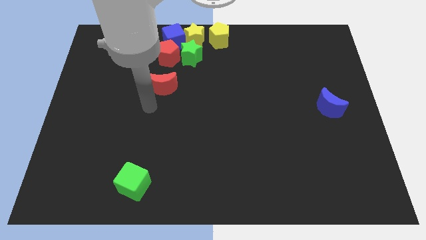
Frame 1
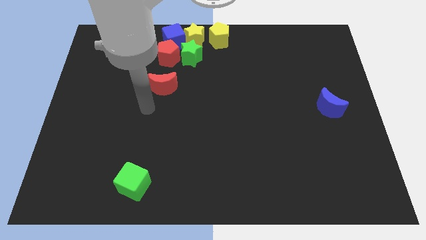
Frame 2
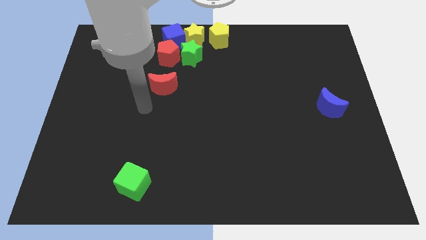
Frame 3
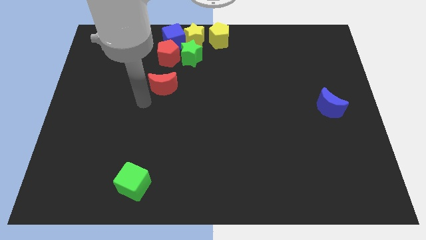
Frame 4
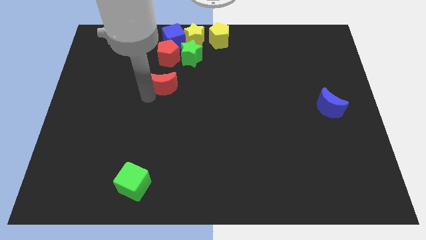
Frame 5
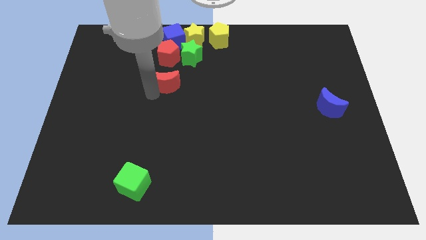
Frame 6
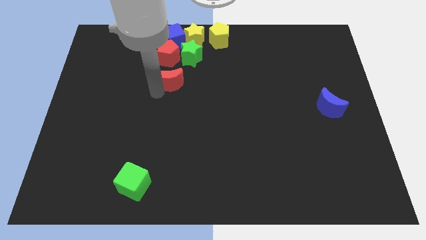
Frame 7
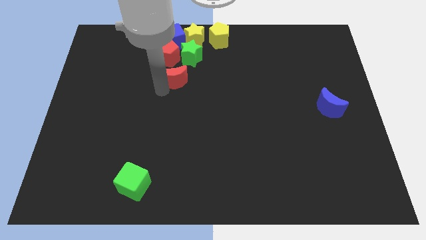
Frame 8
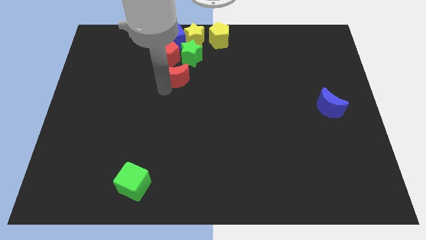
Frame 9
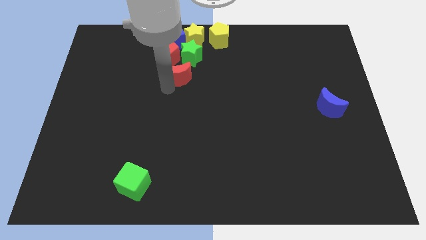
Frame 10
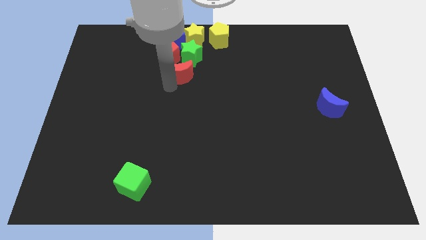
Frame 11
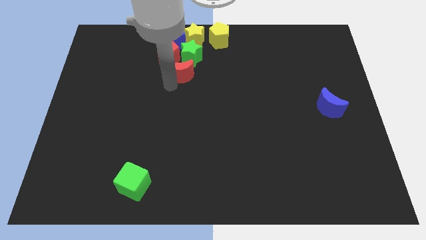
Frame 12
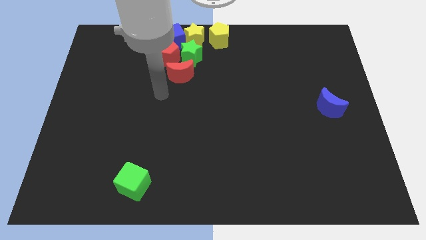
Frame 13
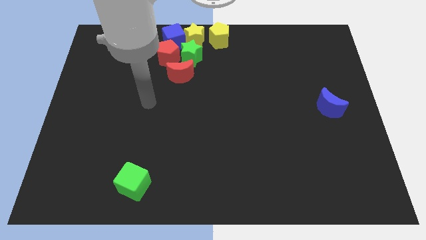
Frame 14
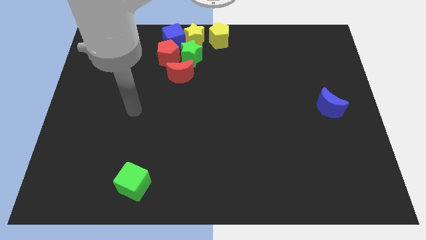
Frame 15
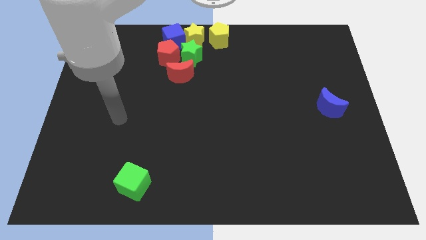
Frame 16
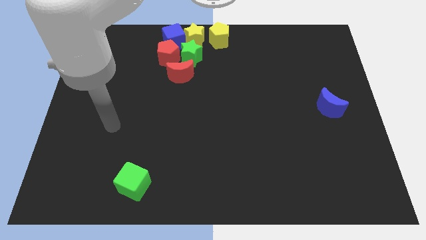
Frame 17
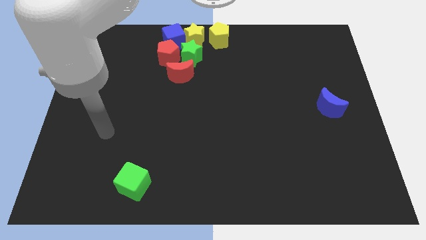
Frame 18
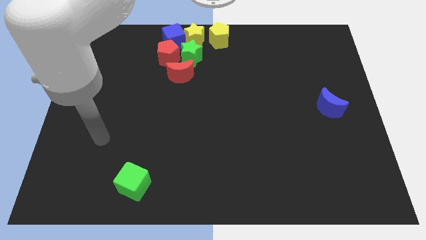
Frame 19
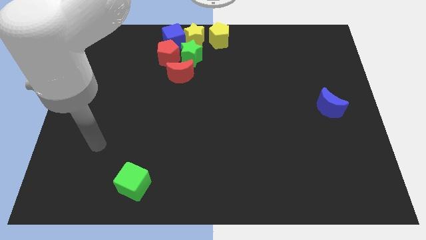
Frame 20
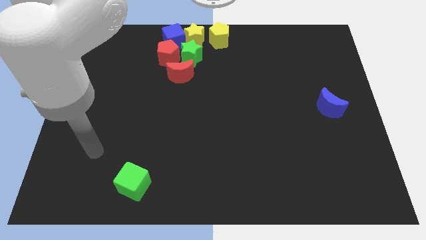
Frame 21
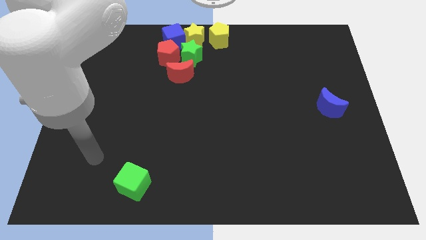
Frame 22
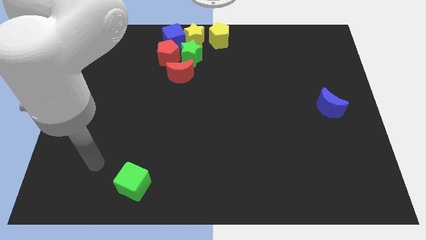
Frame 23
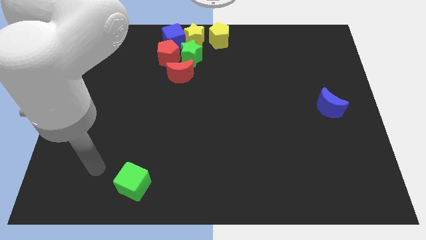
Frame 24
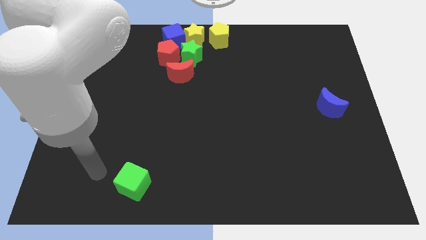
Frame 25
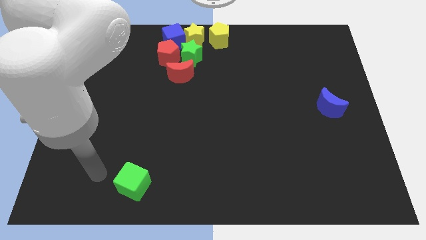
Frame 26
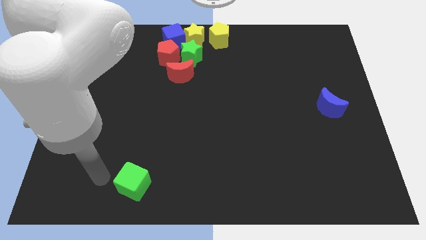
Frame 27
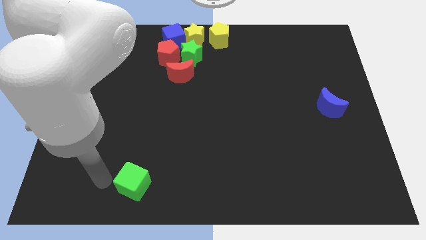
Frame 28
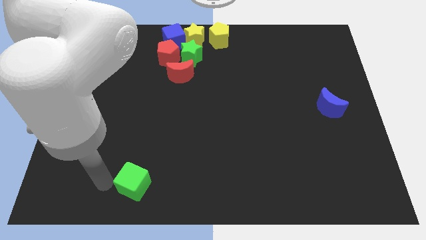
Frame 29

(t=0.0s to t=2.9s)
place the arm near the green cube

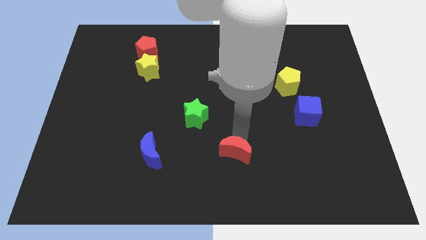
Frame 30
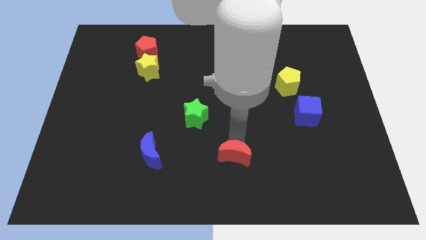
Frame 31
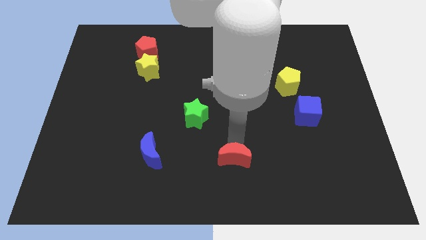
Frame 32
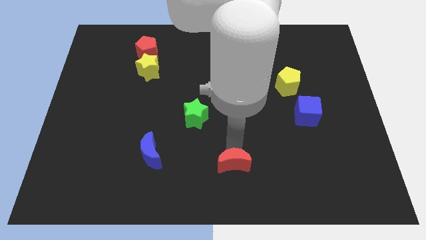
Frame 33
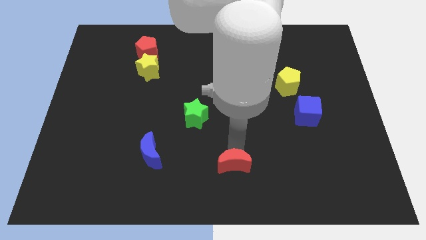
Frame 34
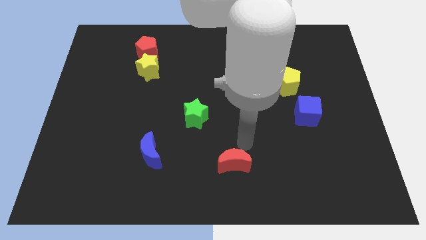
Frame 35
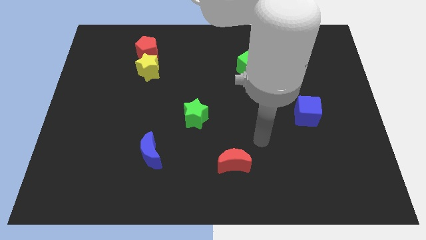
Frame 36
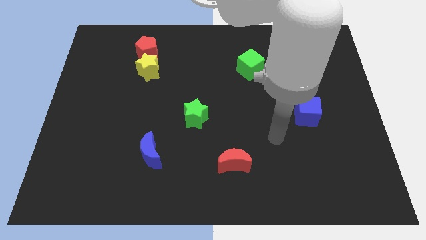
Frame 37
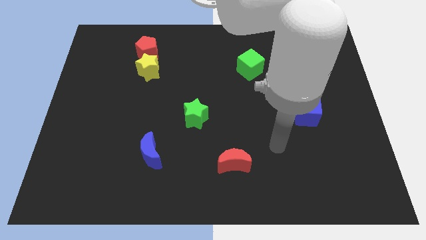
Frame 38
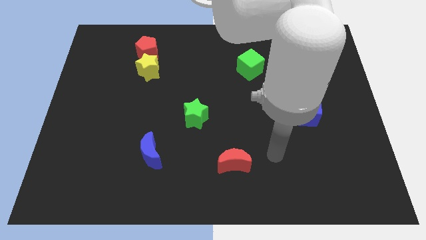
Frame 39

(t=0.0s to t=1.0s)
push the red crescent to the bottom of the board

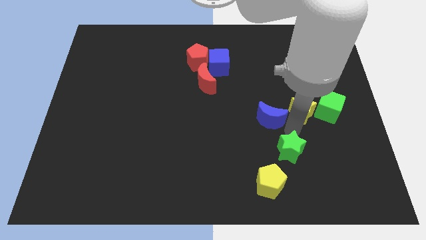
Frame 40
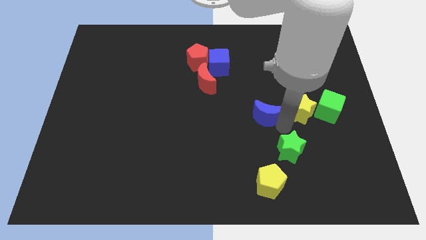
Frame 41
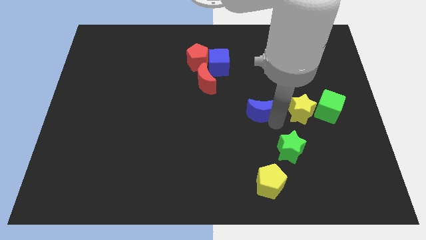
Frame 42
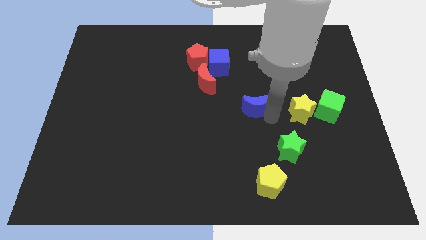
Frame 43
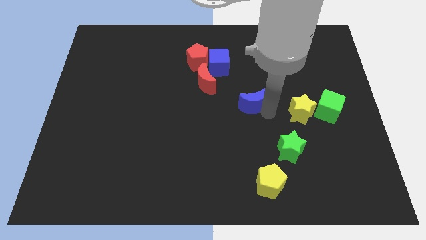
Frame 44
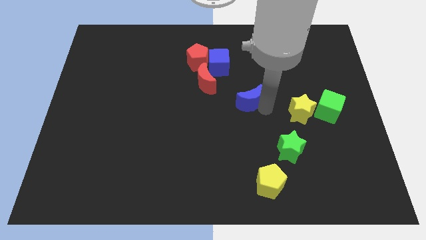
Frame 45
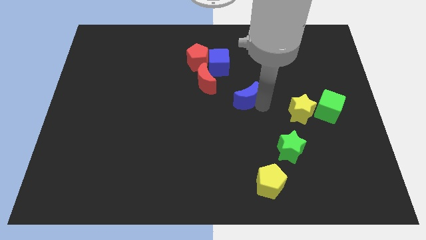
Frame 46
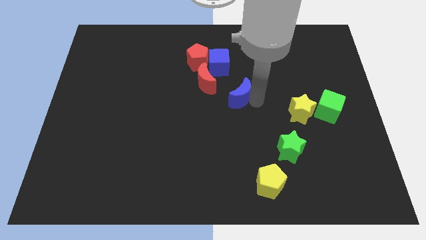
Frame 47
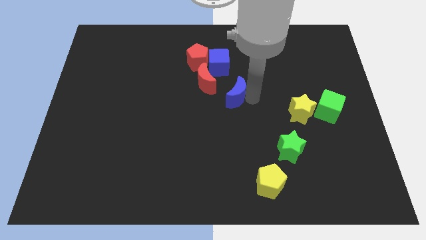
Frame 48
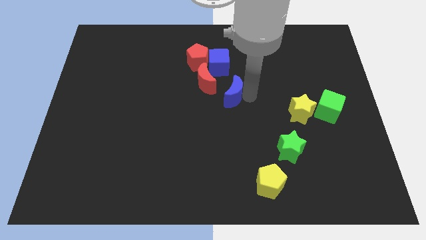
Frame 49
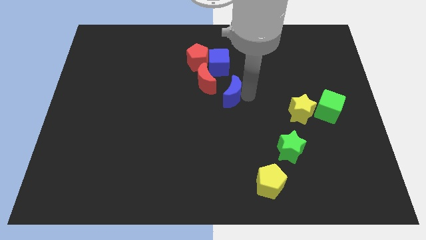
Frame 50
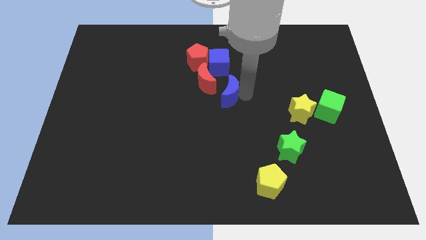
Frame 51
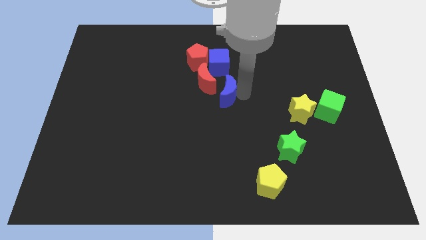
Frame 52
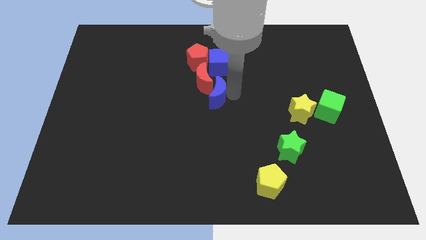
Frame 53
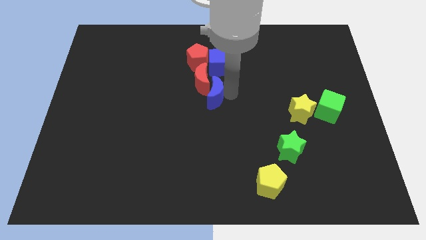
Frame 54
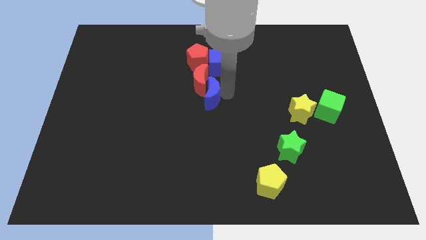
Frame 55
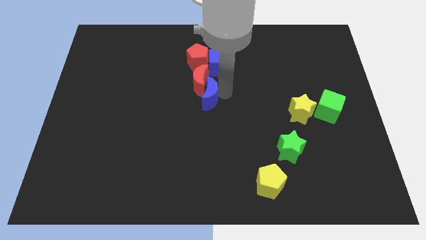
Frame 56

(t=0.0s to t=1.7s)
move the blue crescent into the red crescent

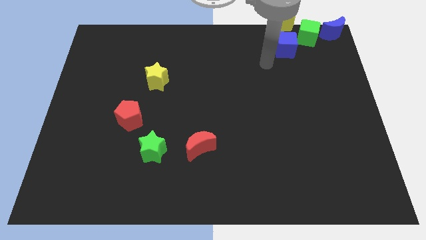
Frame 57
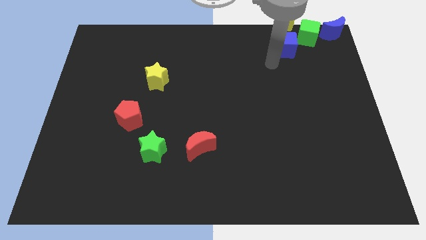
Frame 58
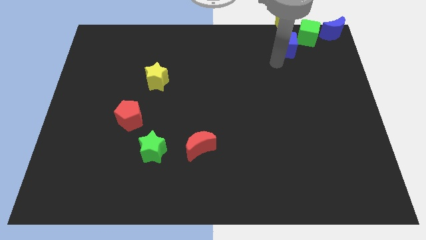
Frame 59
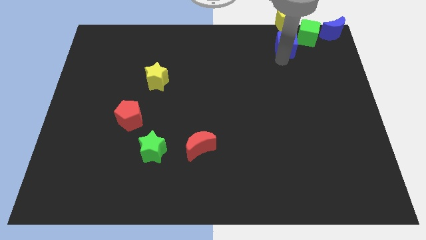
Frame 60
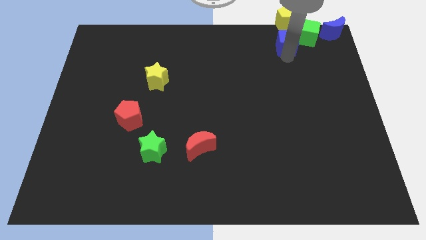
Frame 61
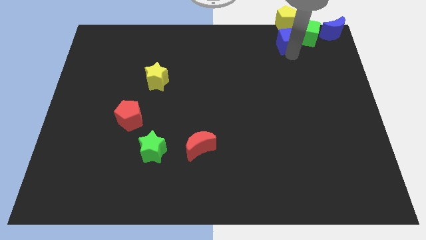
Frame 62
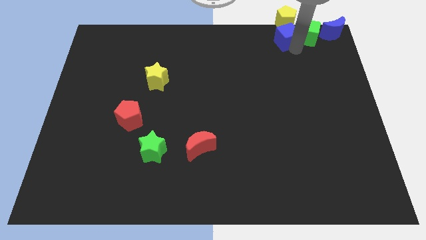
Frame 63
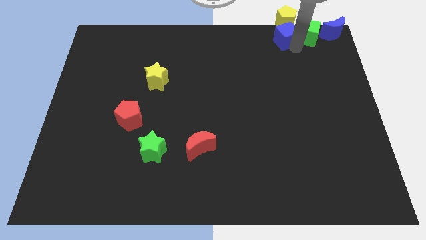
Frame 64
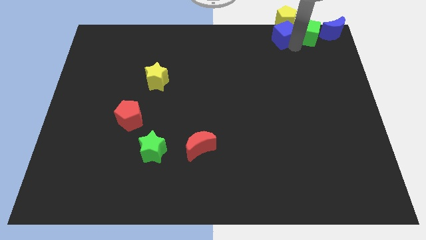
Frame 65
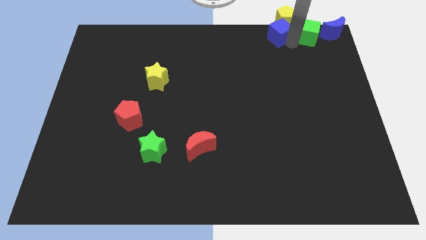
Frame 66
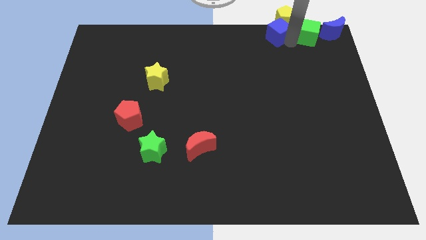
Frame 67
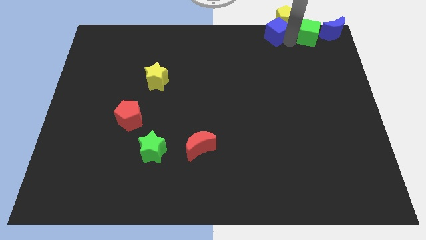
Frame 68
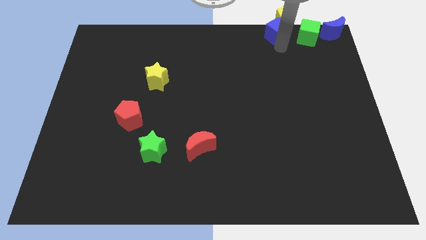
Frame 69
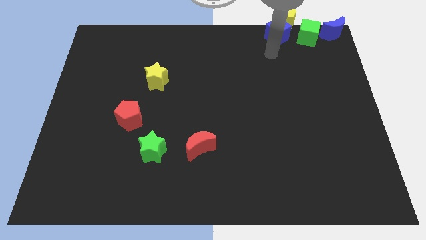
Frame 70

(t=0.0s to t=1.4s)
place the blue cube parallel left to the green cube

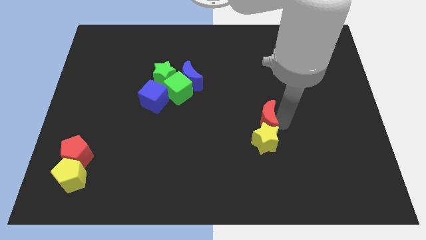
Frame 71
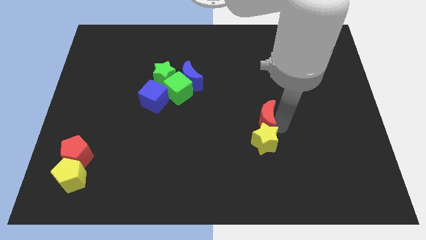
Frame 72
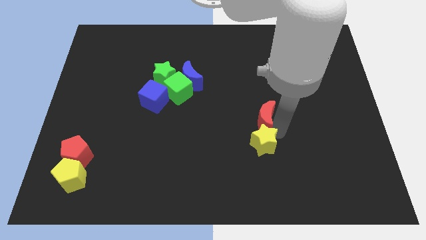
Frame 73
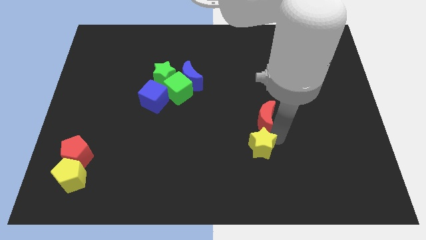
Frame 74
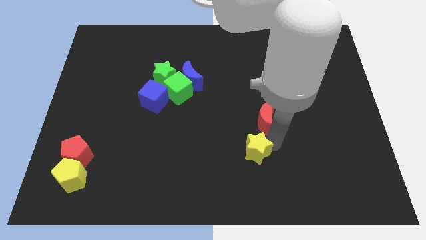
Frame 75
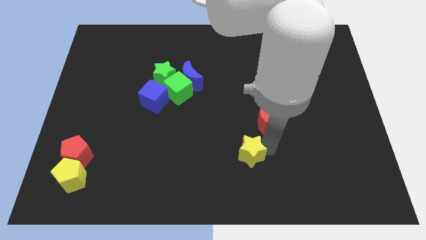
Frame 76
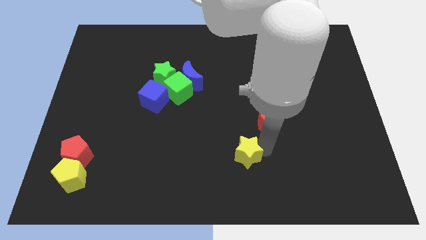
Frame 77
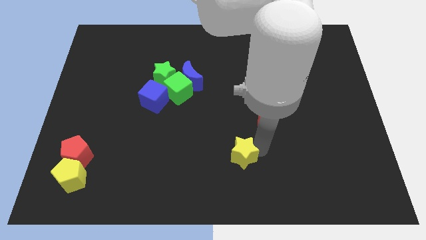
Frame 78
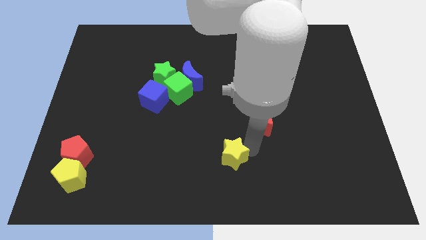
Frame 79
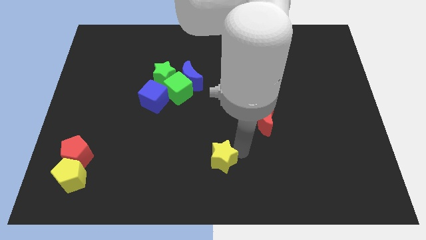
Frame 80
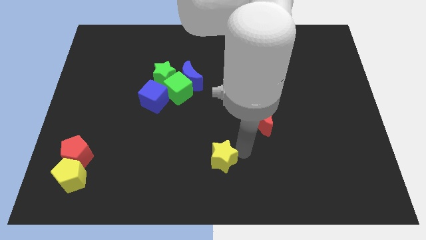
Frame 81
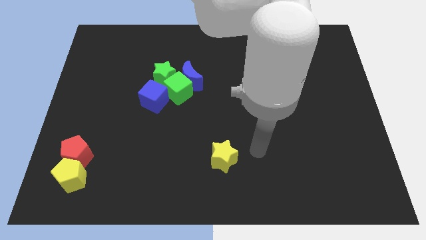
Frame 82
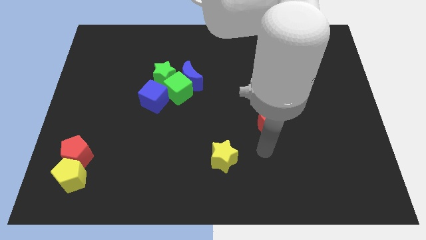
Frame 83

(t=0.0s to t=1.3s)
separate the yellow star from the red moon

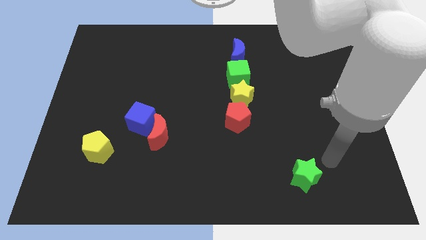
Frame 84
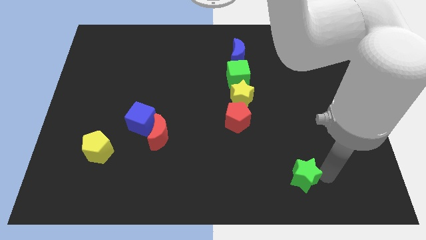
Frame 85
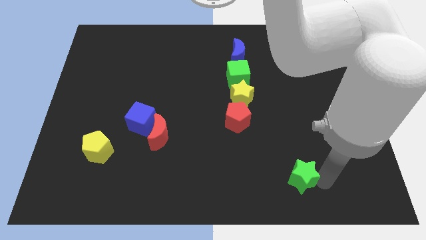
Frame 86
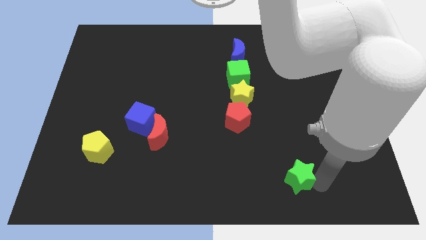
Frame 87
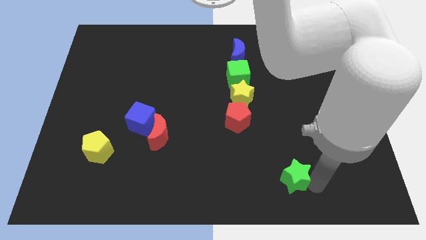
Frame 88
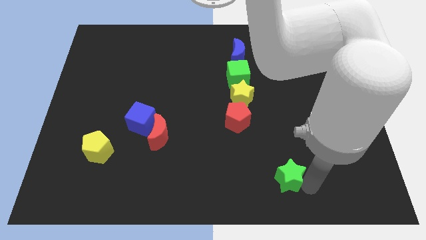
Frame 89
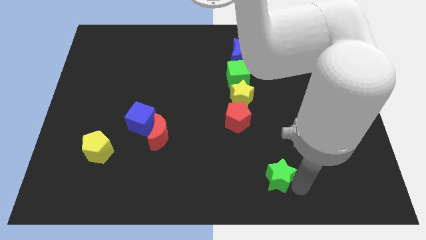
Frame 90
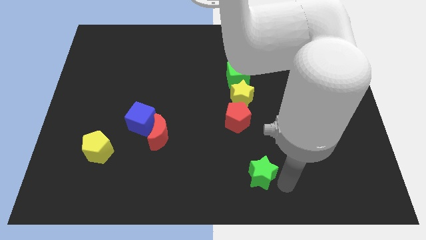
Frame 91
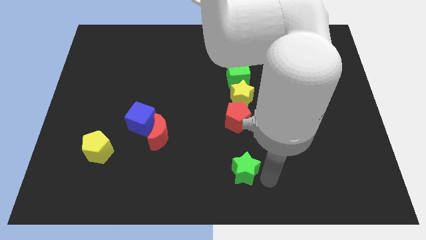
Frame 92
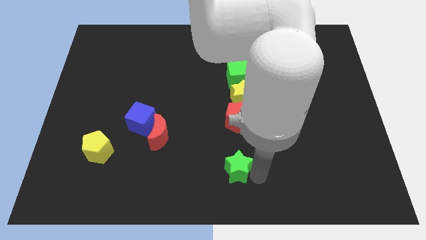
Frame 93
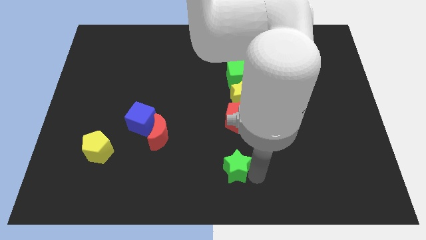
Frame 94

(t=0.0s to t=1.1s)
place green star vertically below red pentagon
